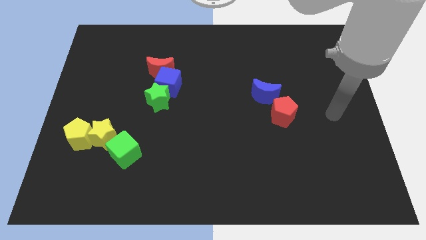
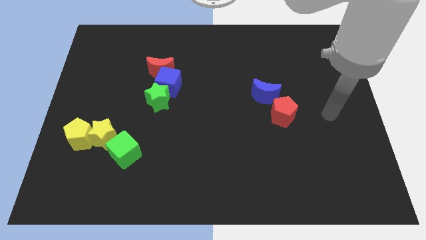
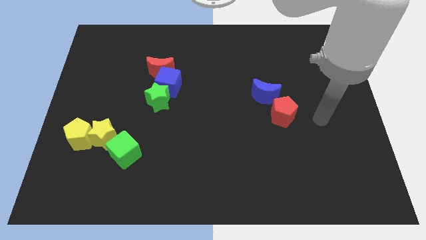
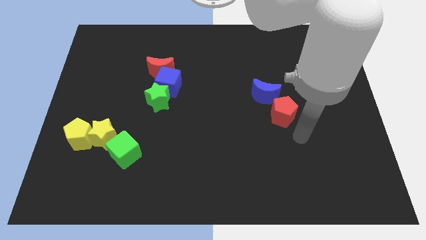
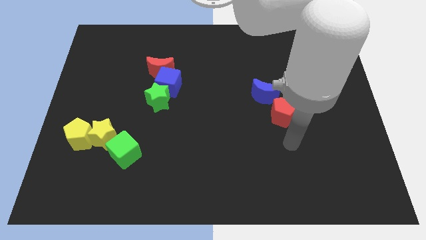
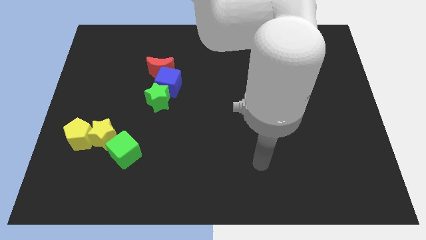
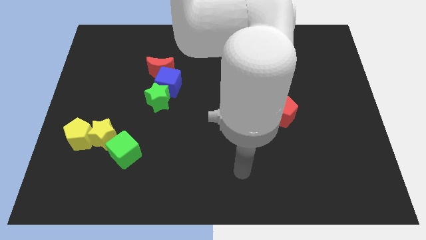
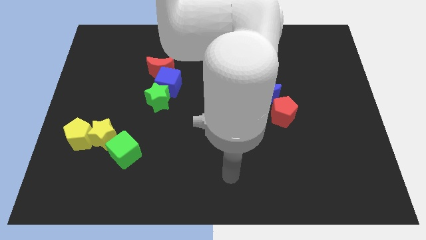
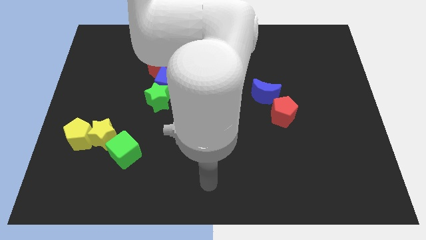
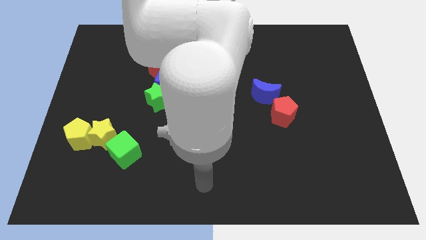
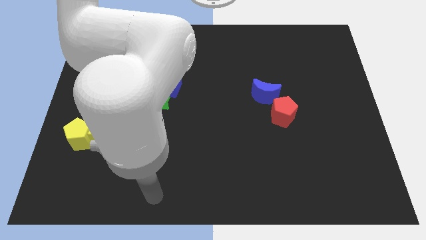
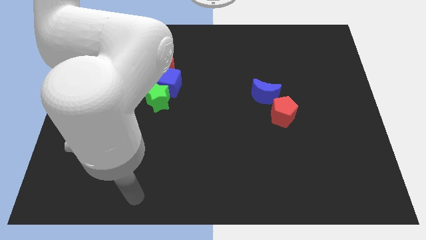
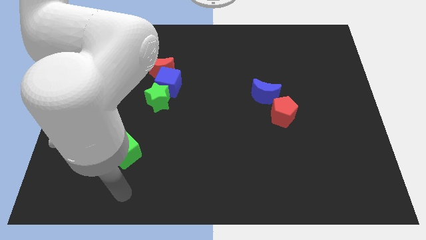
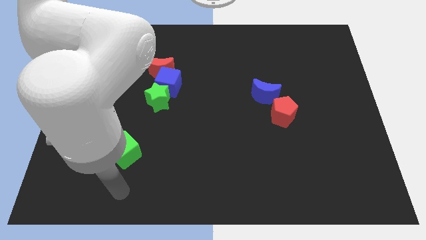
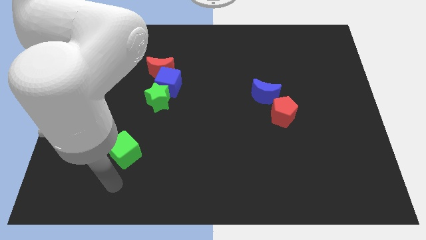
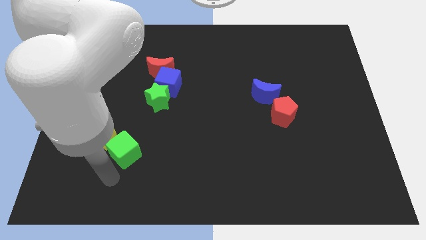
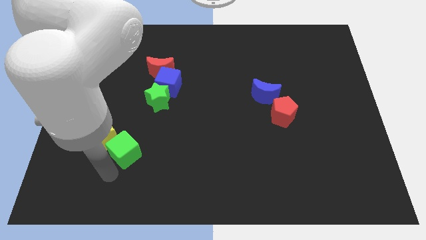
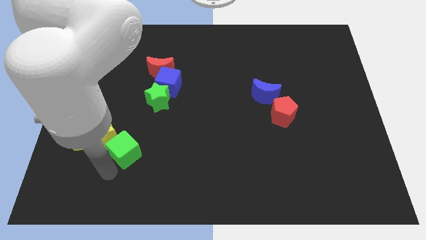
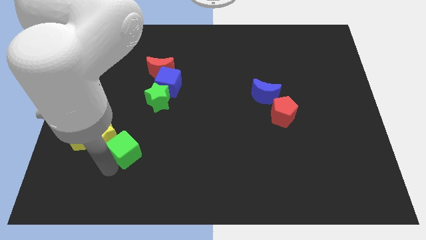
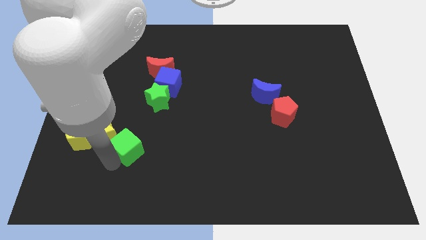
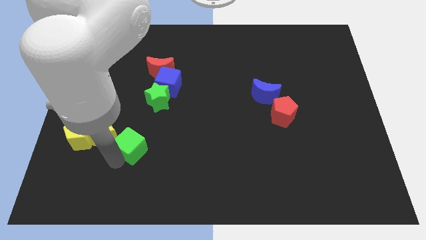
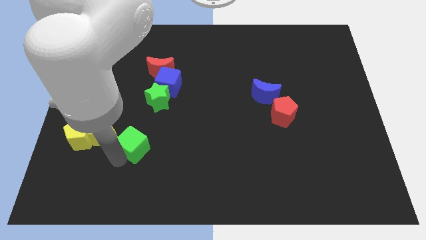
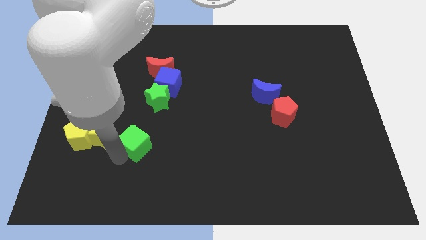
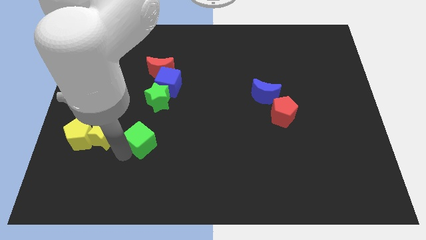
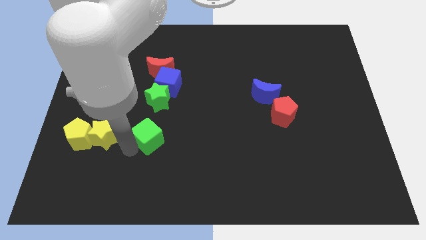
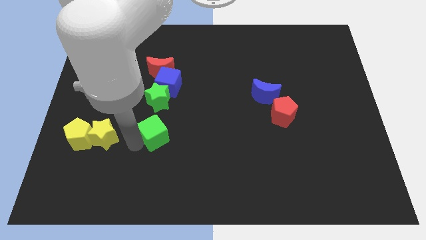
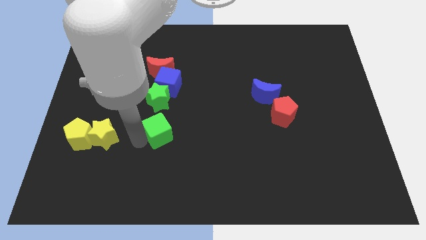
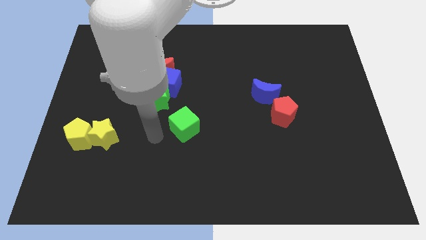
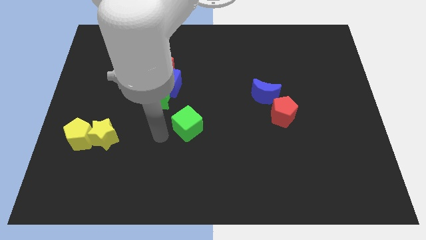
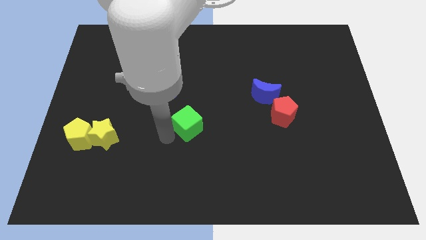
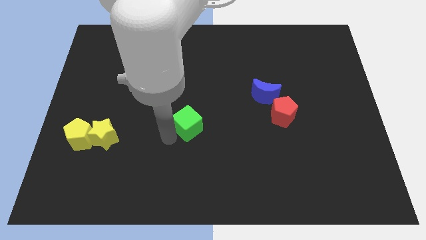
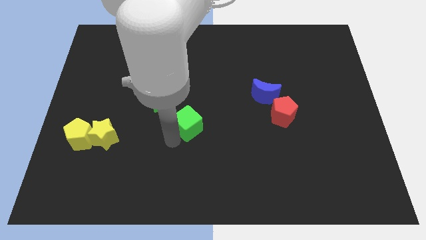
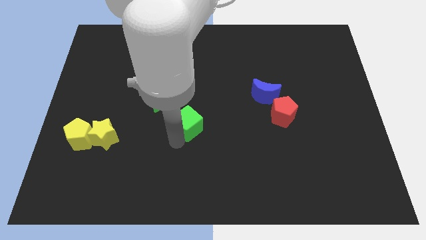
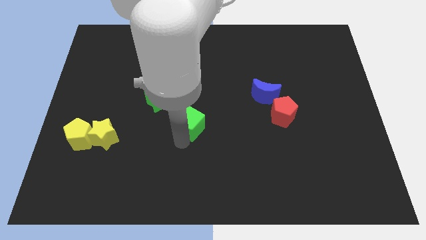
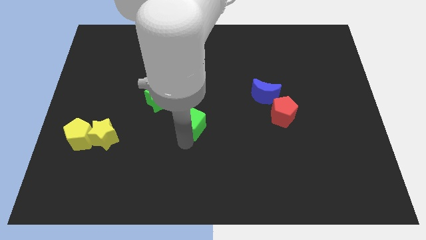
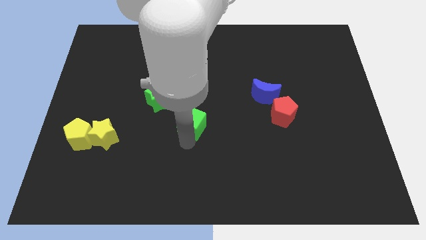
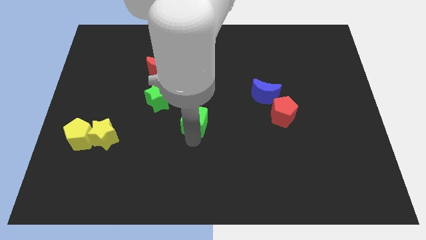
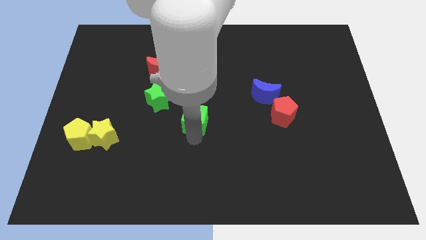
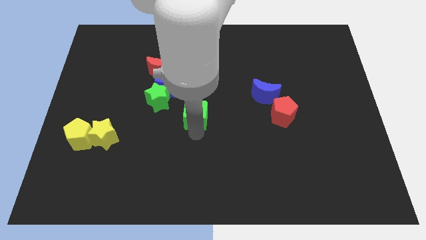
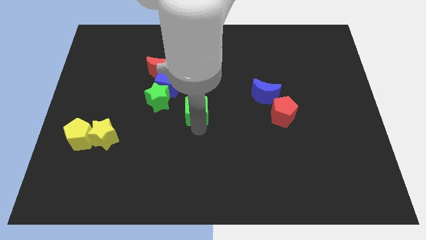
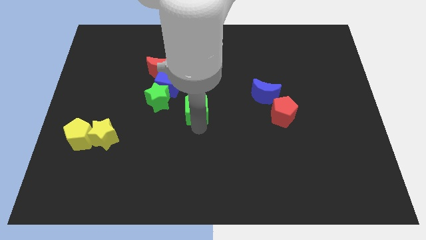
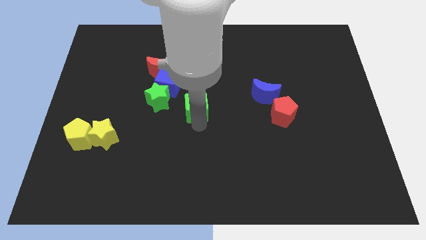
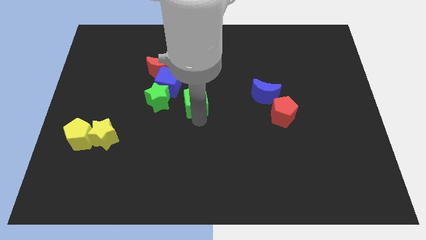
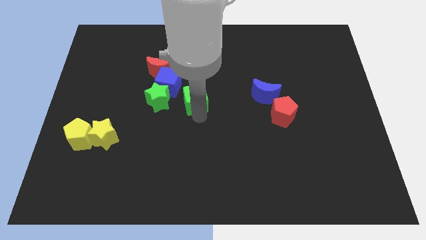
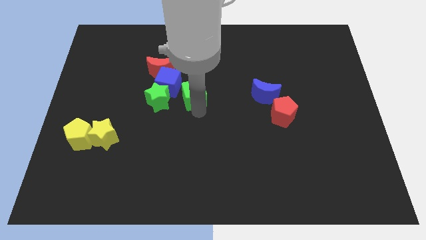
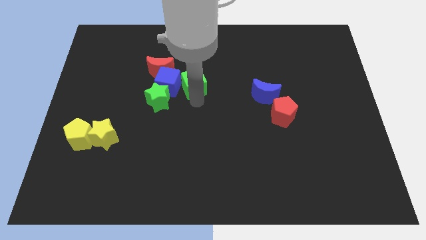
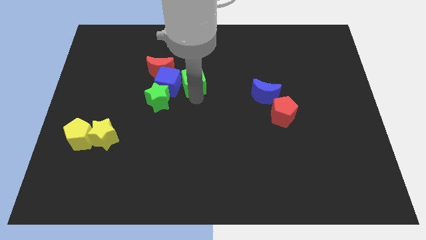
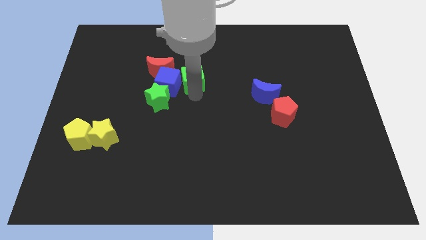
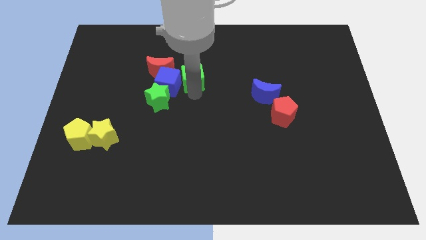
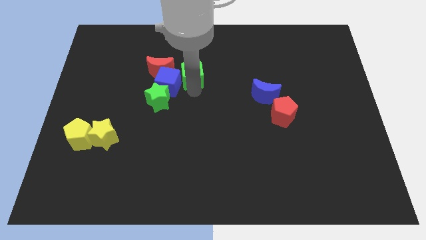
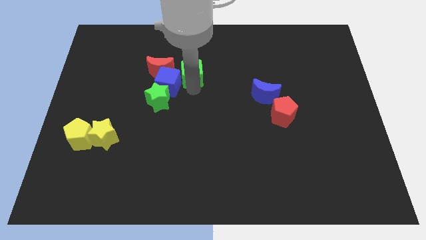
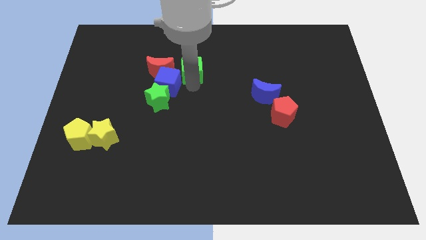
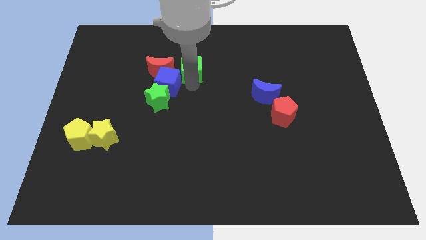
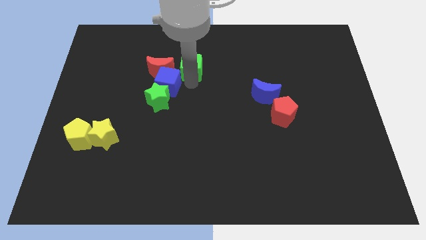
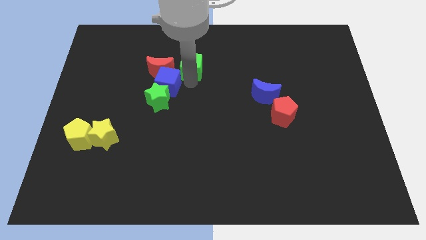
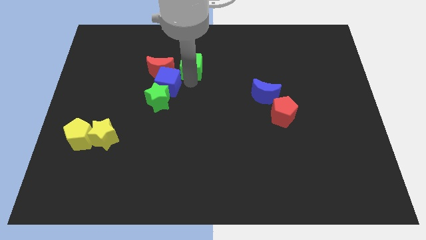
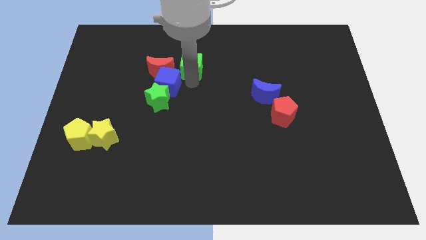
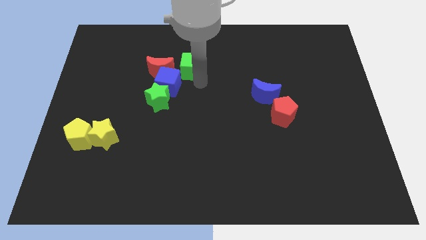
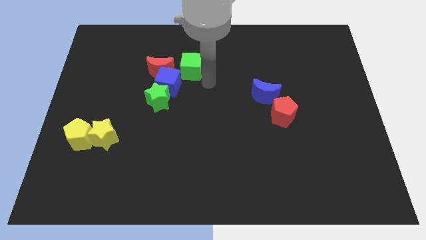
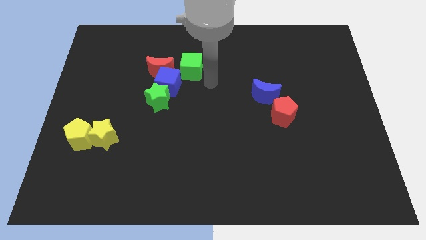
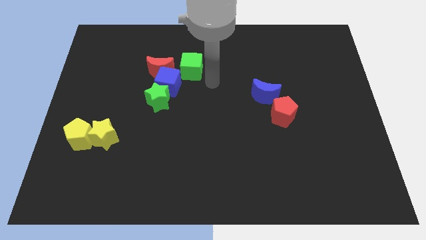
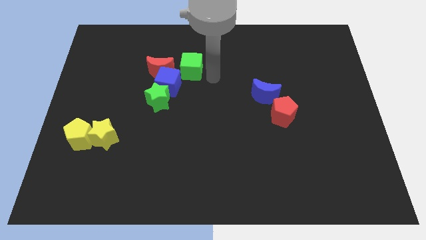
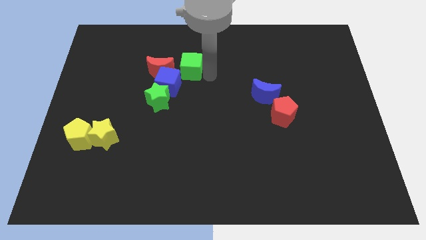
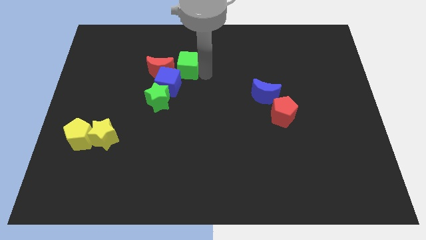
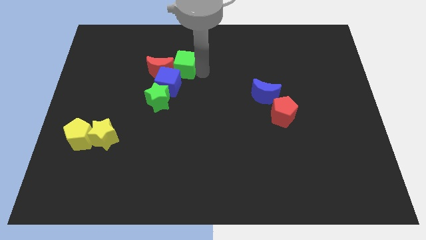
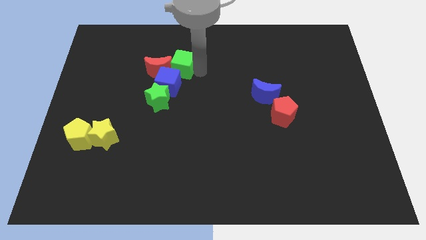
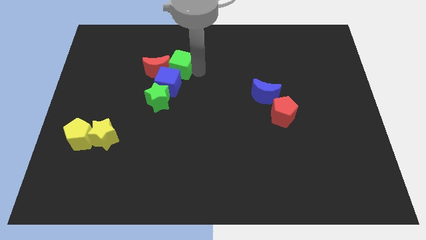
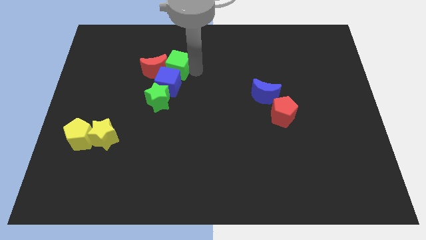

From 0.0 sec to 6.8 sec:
push the green cube close to the red moon

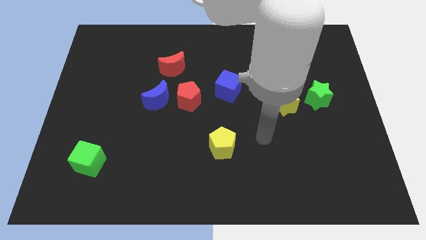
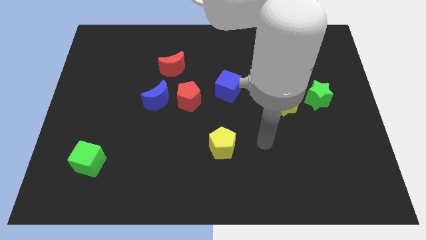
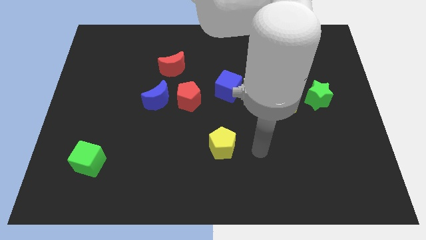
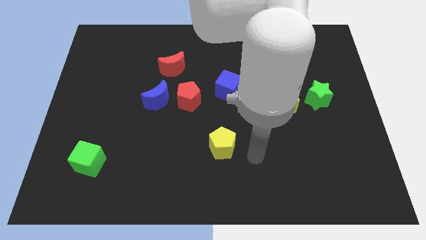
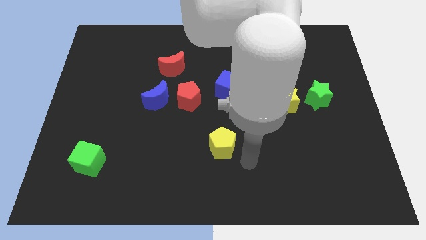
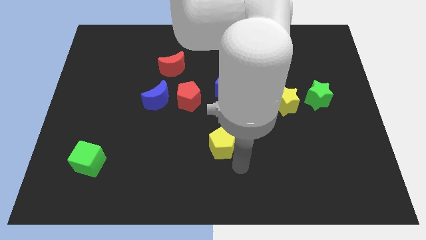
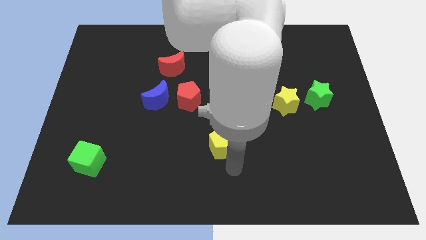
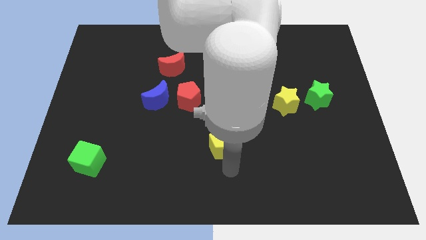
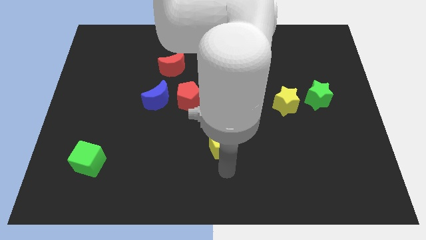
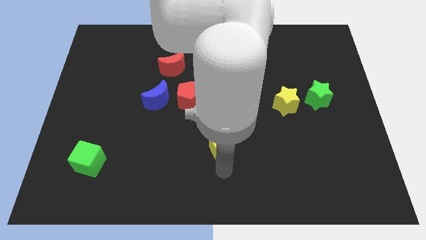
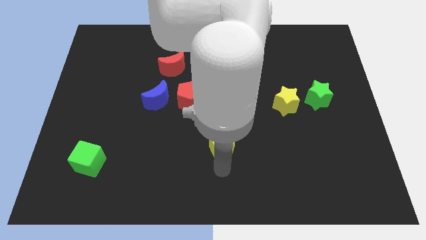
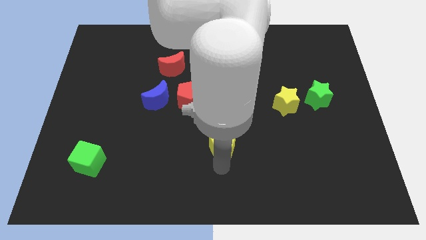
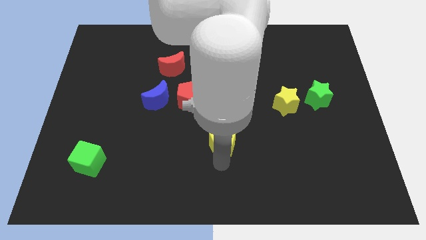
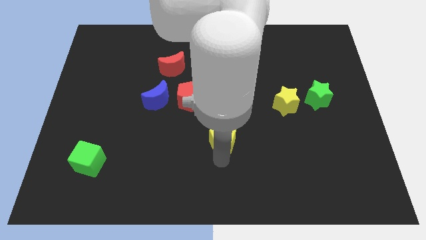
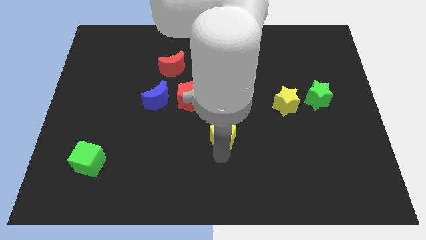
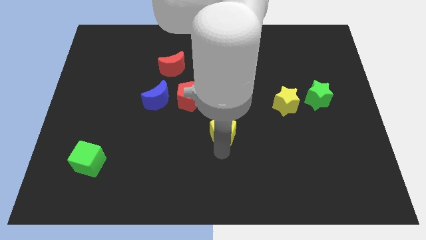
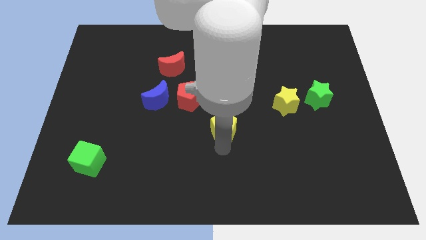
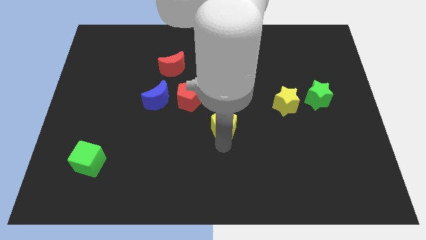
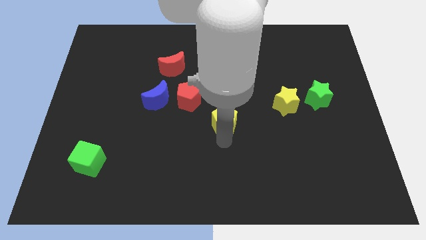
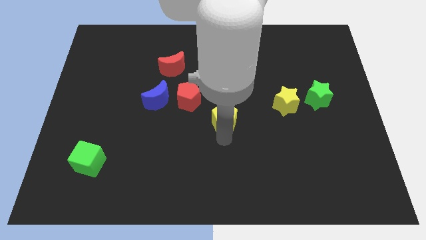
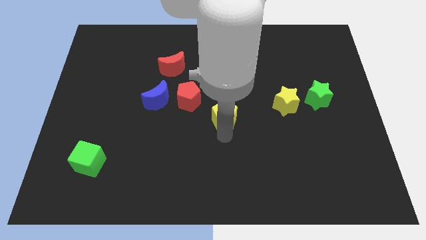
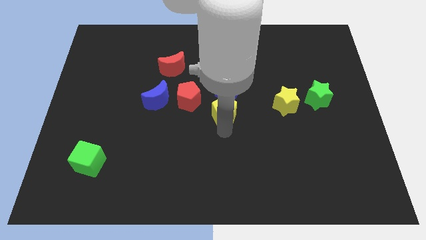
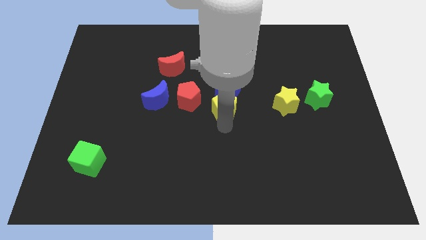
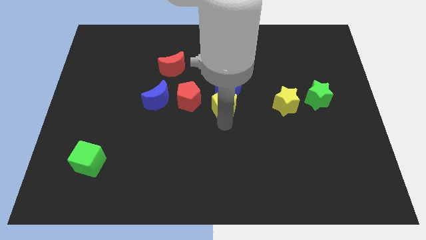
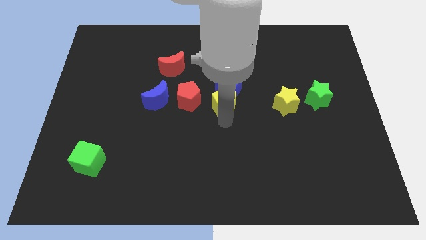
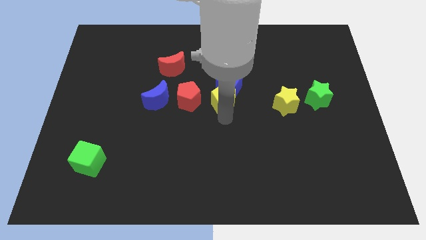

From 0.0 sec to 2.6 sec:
put the yellow pentagon next to the blue cube
